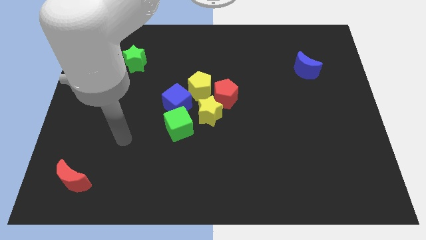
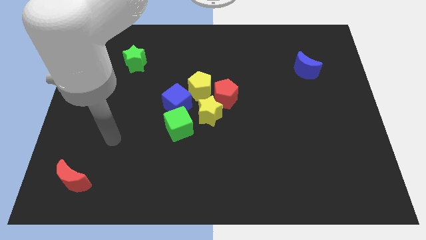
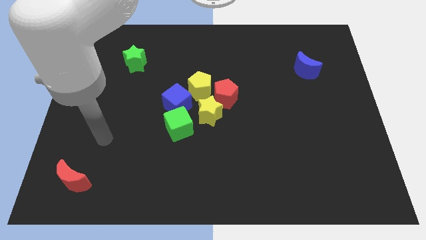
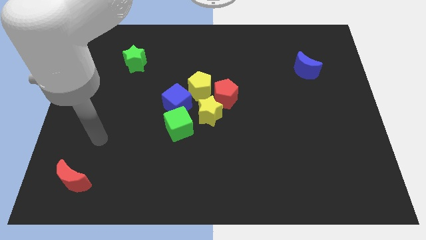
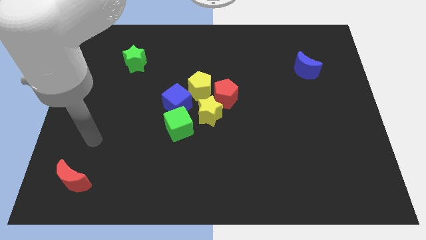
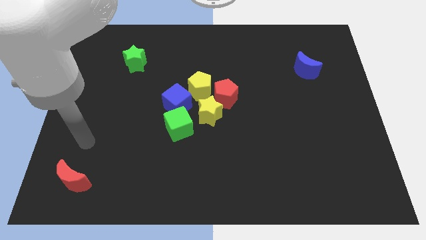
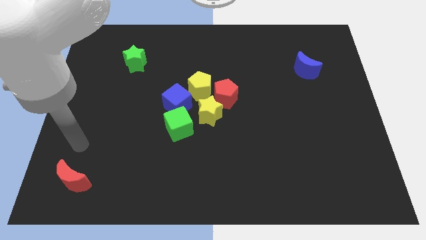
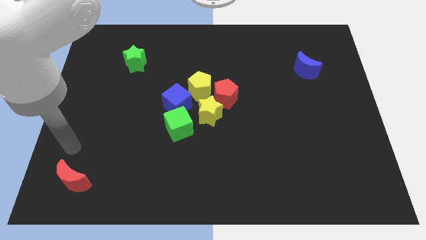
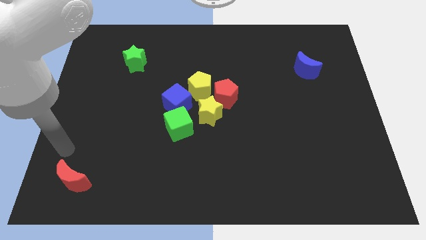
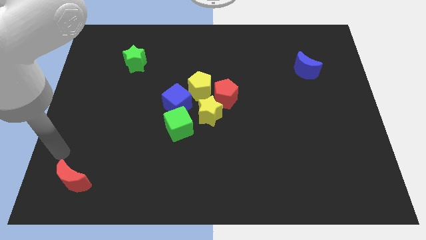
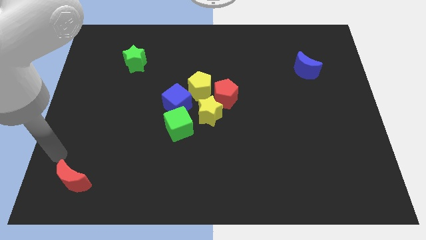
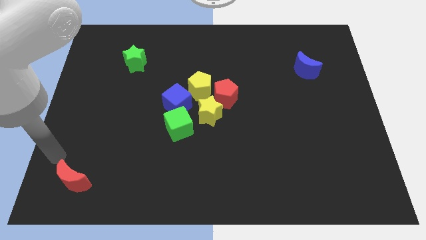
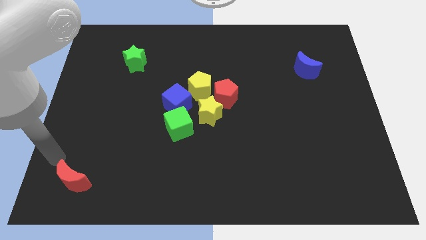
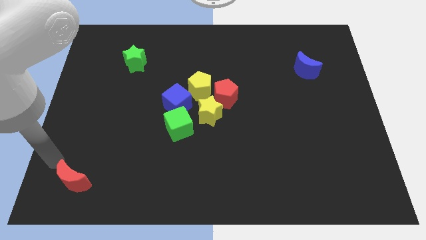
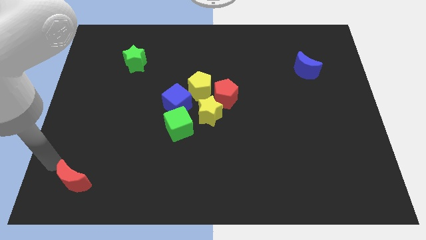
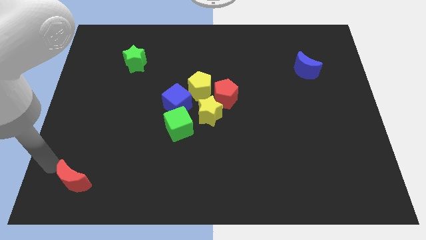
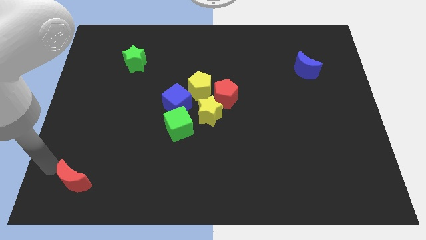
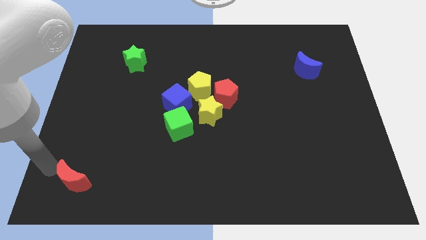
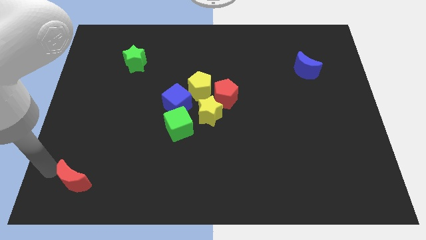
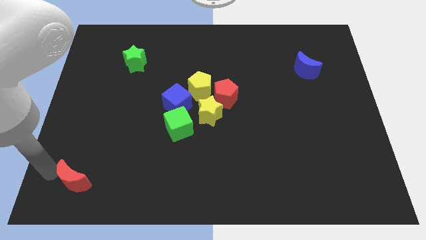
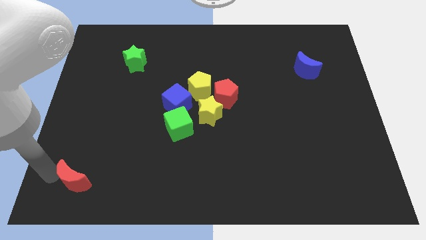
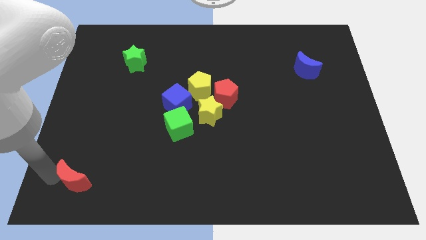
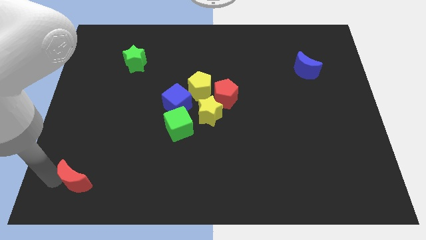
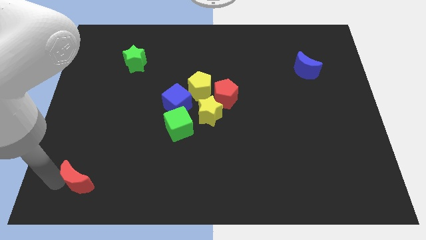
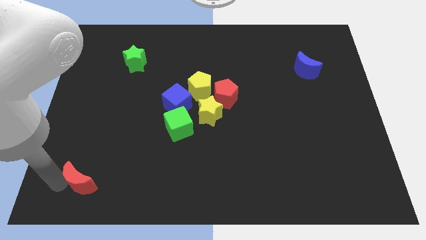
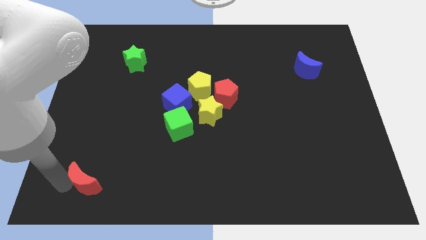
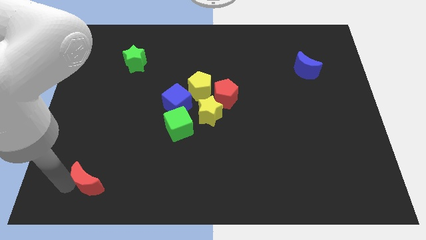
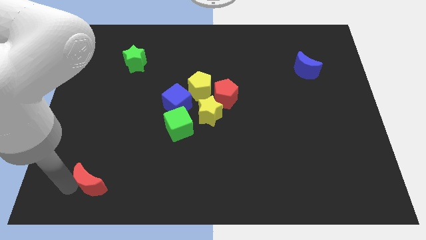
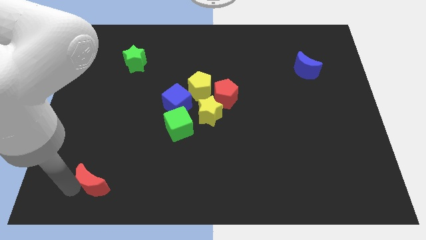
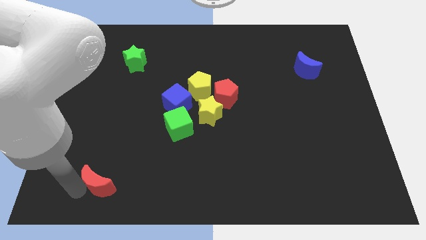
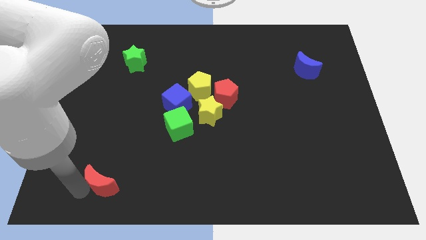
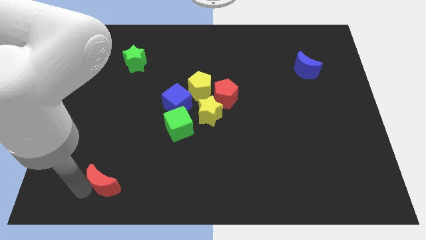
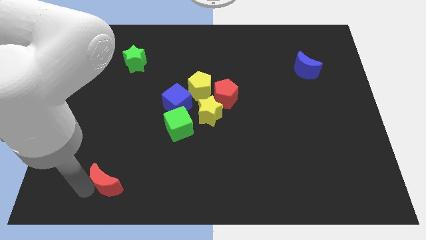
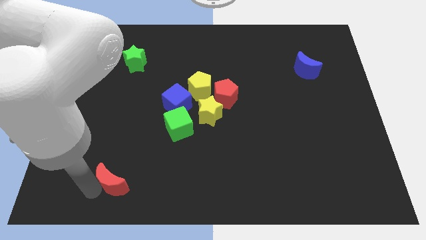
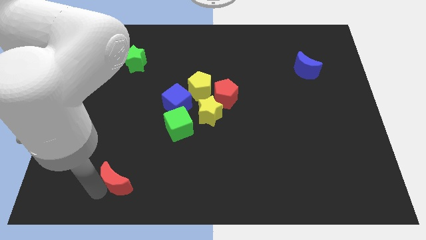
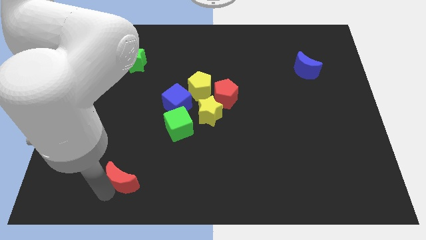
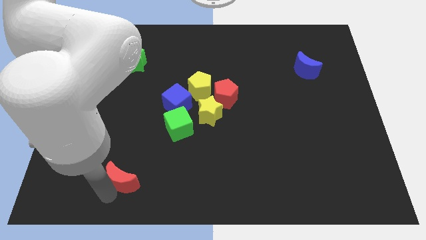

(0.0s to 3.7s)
move the red crescent towards the right side of your arm

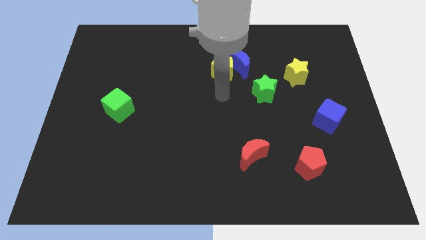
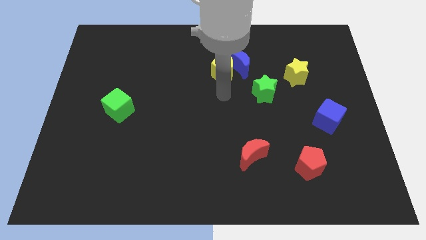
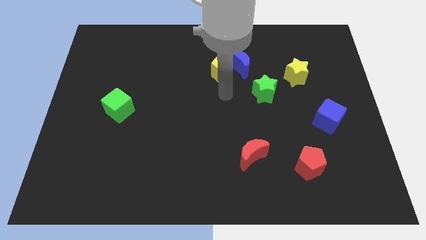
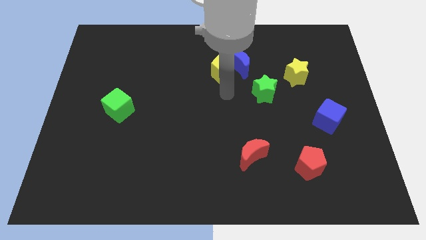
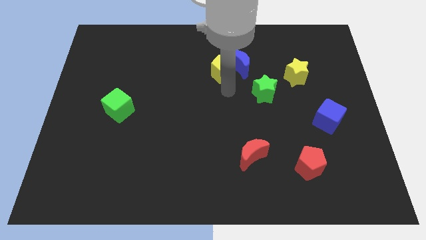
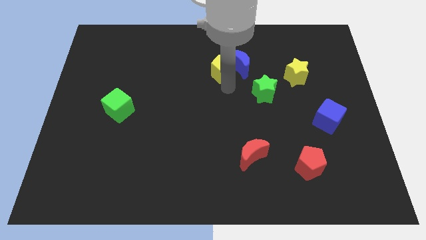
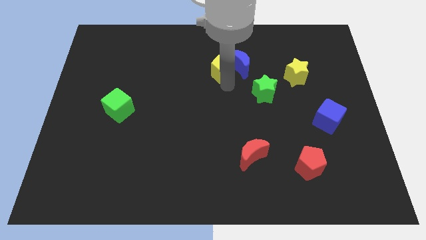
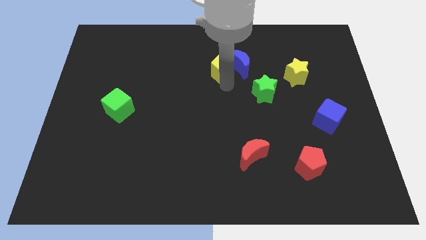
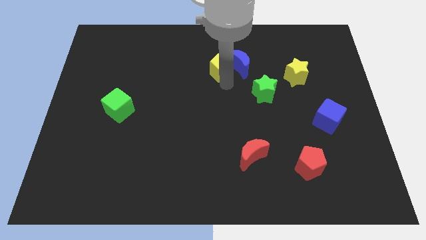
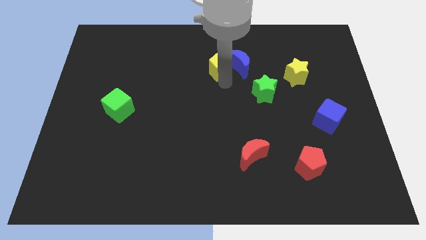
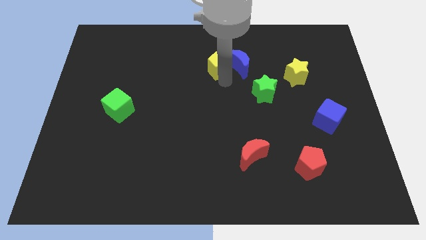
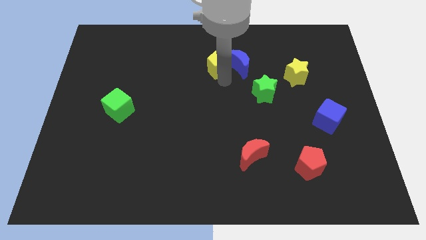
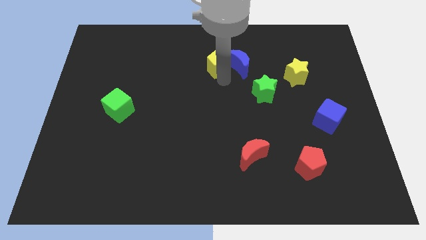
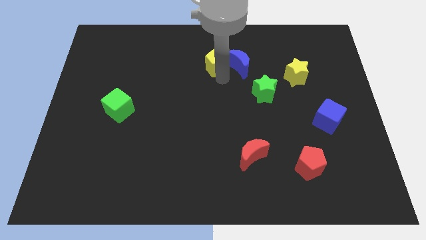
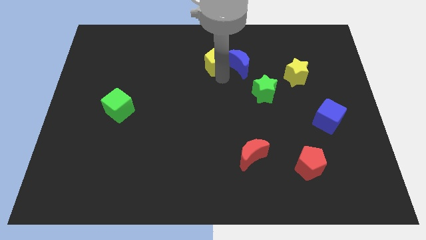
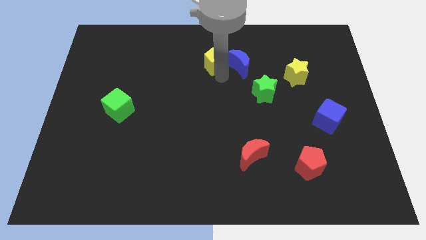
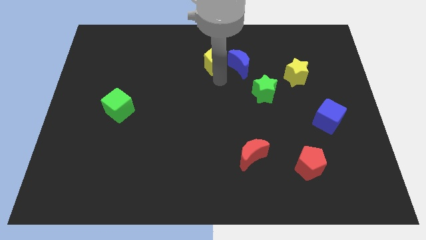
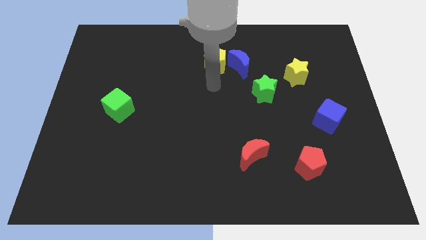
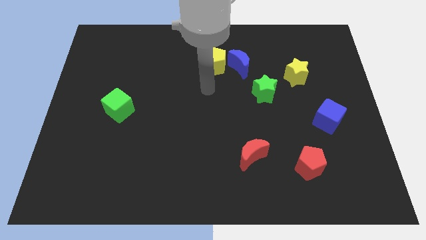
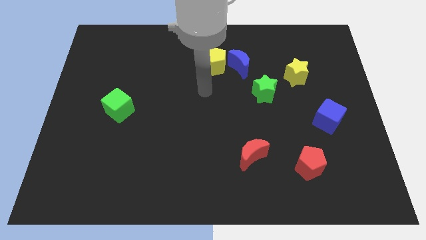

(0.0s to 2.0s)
move the yellow pentagon slightly

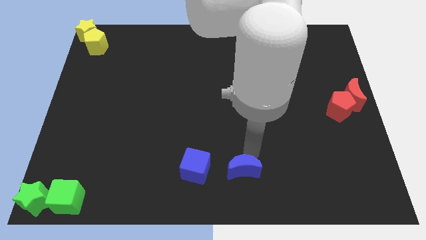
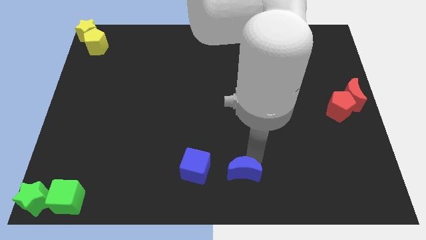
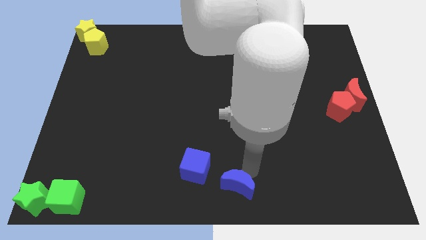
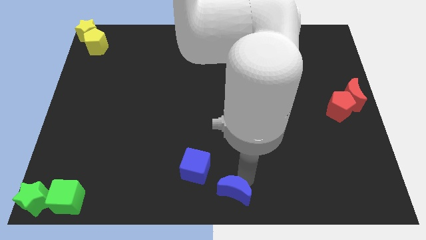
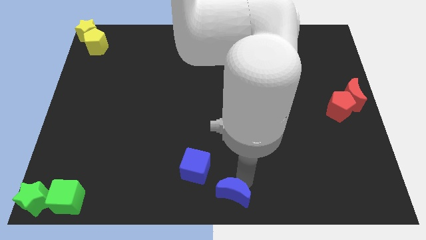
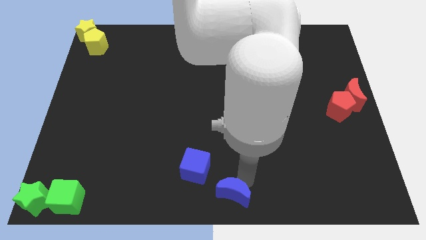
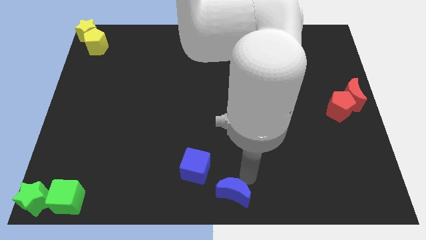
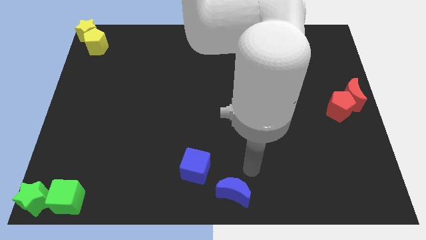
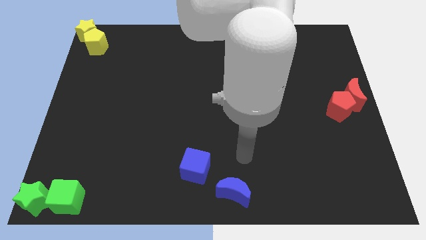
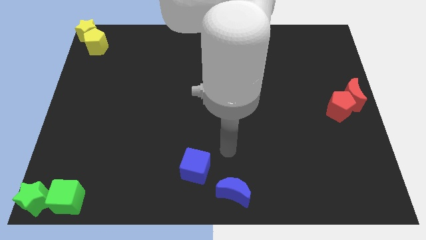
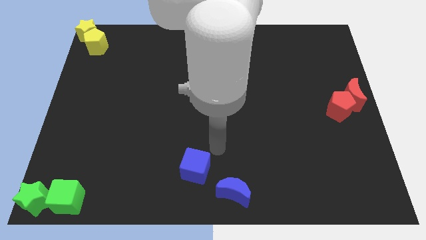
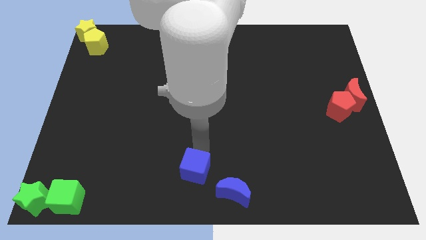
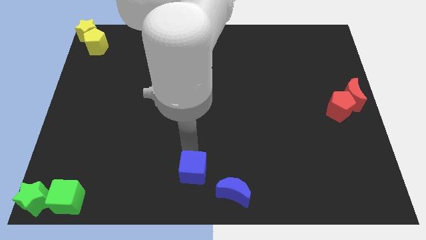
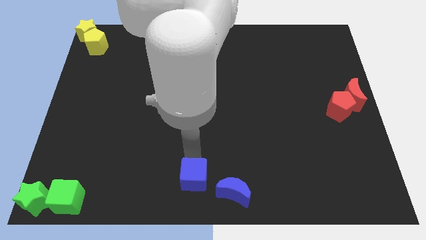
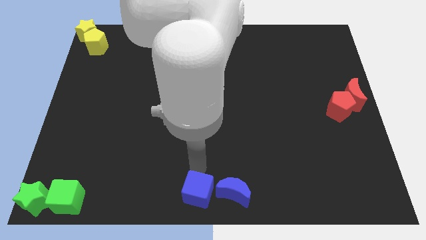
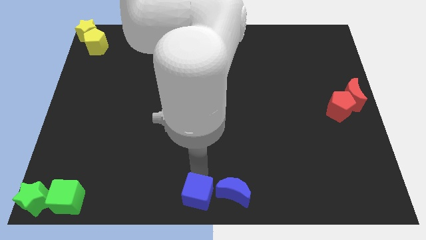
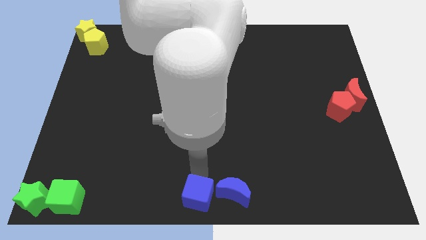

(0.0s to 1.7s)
place the blue moon and pentagon towards the bottom center of the board

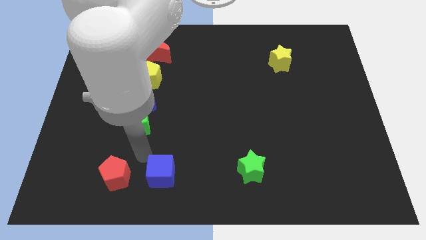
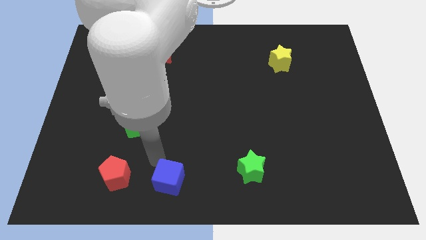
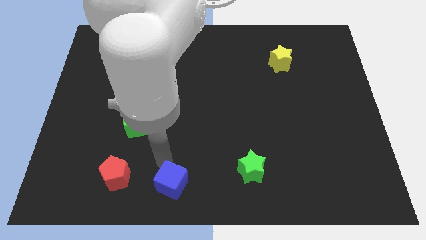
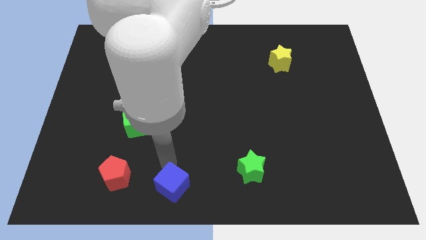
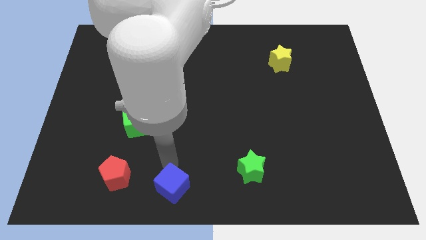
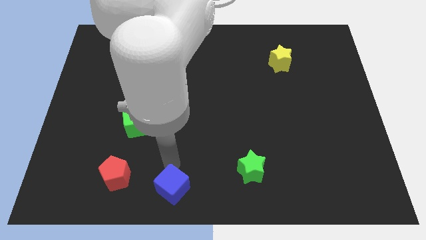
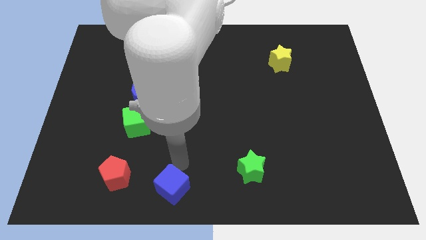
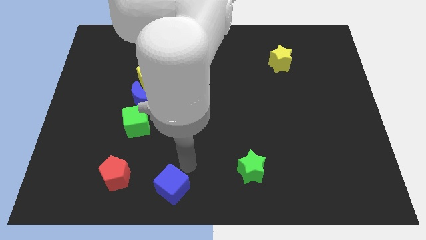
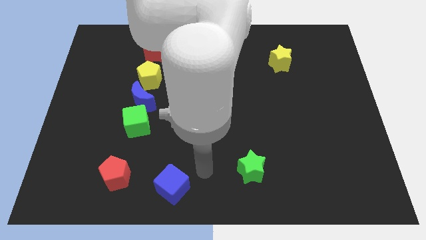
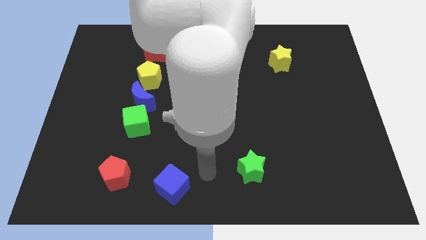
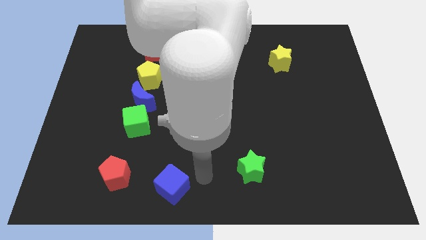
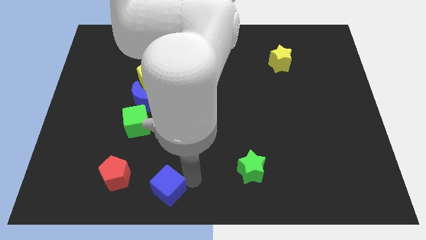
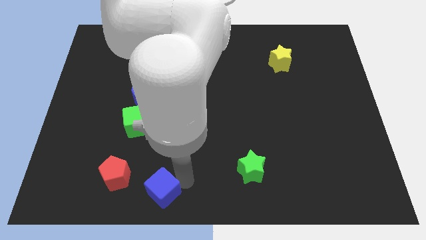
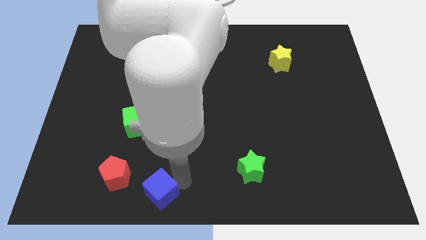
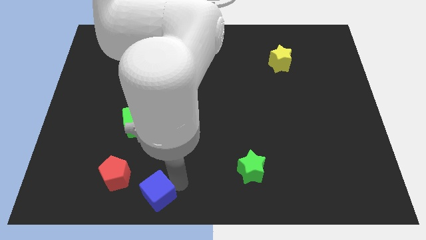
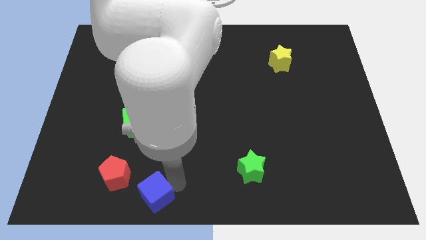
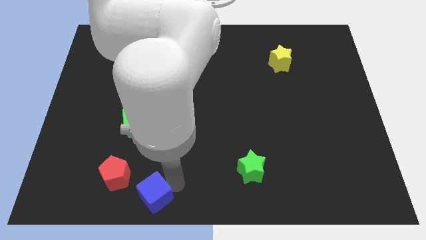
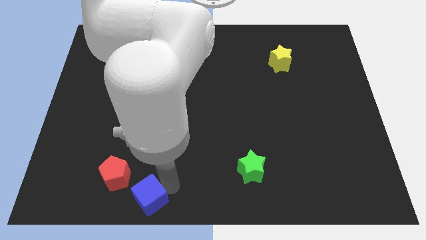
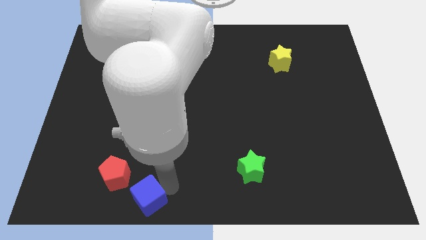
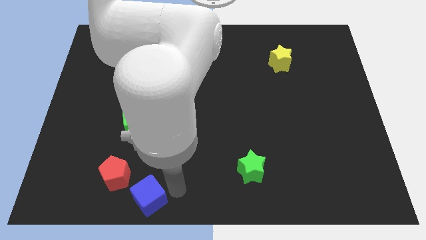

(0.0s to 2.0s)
push the blue cube to the bottom right side of the red pentagon
